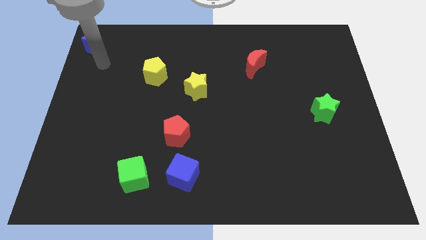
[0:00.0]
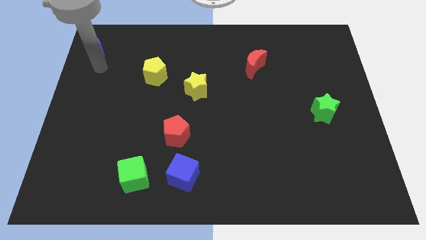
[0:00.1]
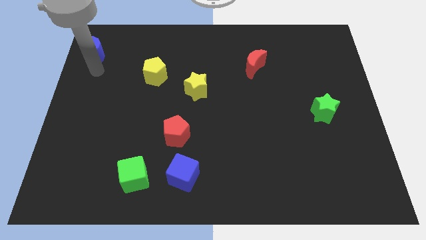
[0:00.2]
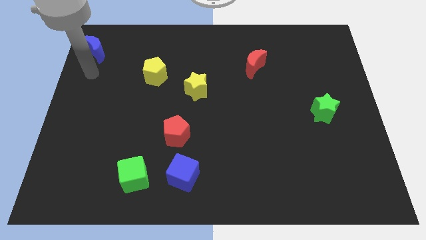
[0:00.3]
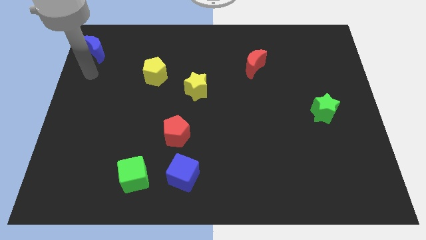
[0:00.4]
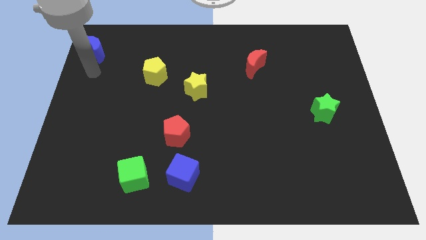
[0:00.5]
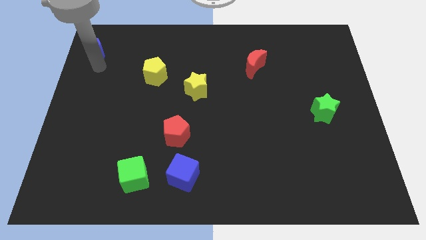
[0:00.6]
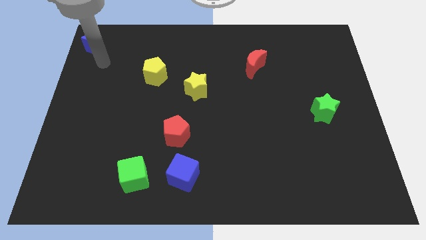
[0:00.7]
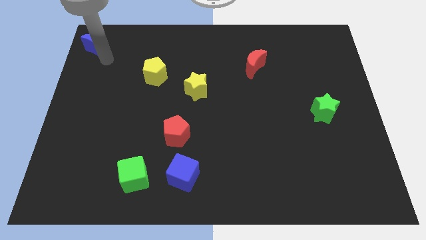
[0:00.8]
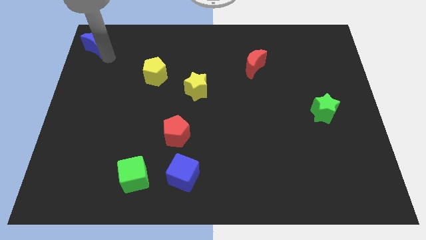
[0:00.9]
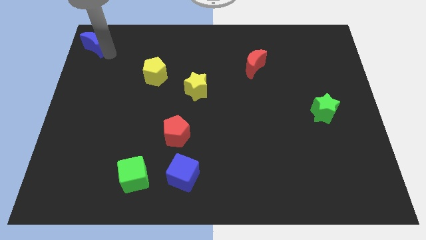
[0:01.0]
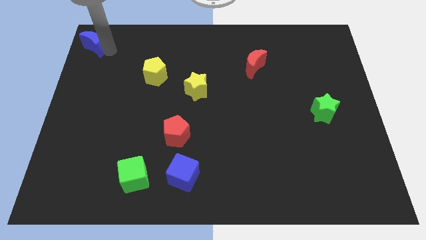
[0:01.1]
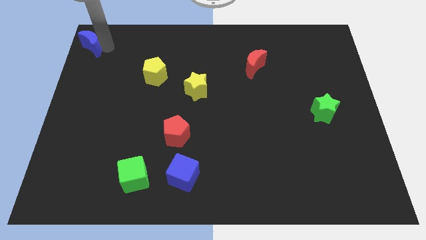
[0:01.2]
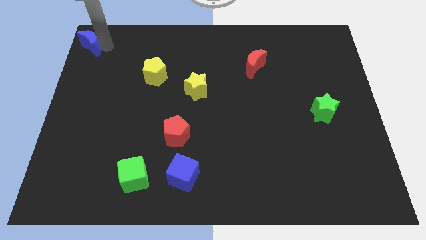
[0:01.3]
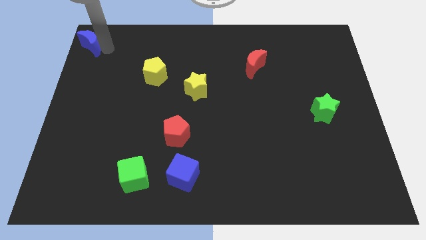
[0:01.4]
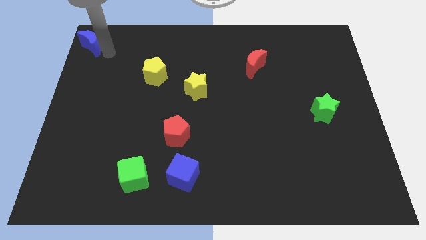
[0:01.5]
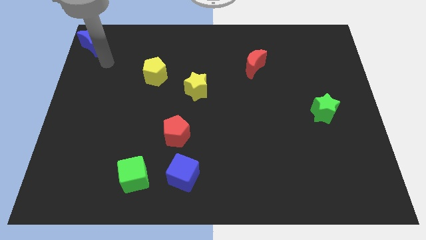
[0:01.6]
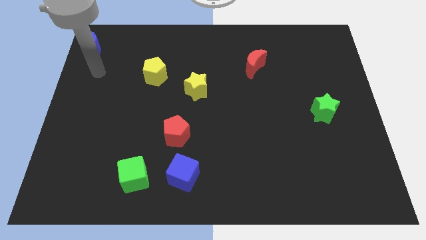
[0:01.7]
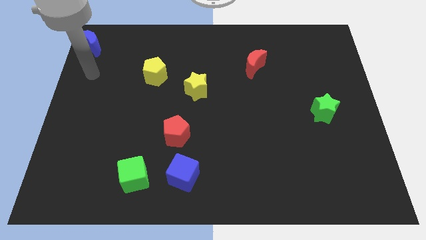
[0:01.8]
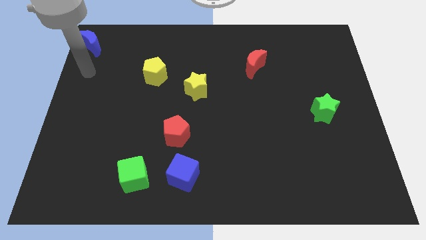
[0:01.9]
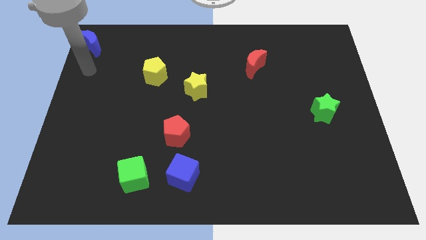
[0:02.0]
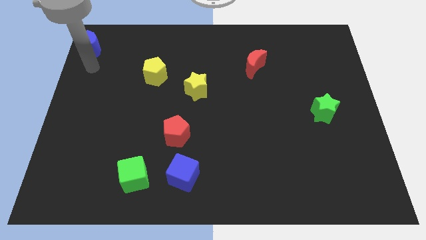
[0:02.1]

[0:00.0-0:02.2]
place your arm below the blue moon

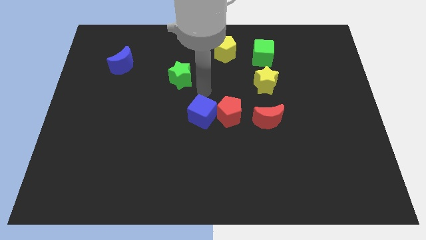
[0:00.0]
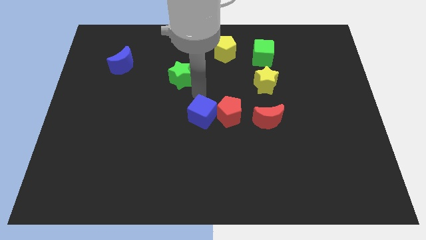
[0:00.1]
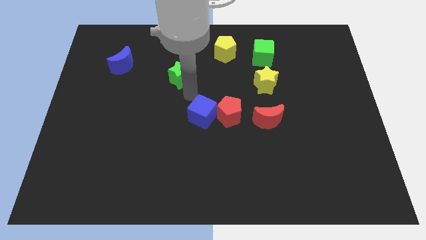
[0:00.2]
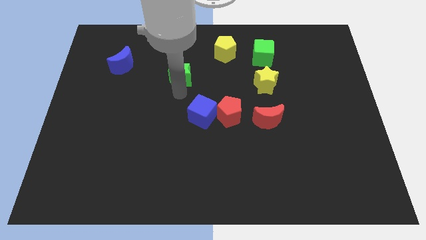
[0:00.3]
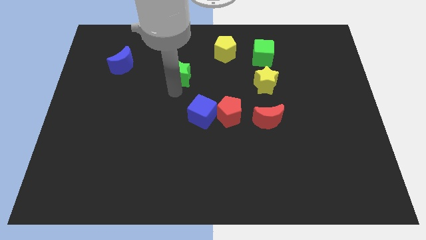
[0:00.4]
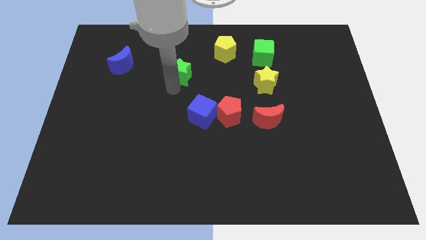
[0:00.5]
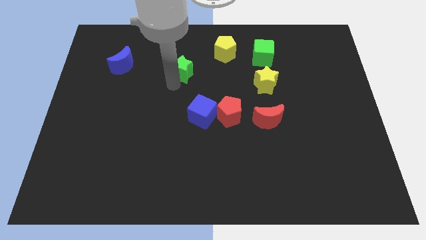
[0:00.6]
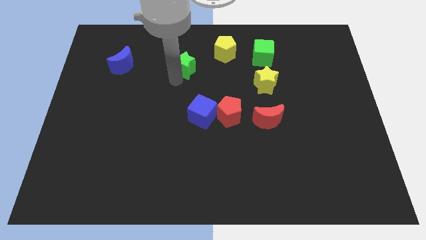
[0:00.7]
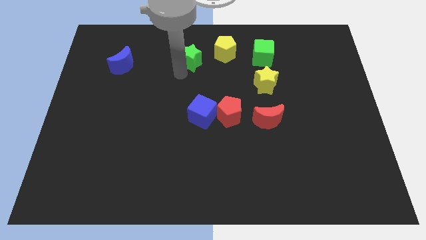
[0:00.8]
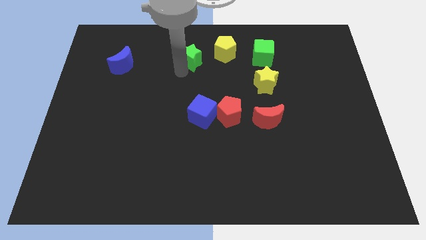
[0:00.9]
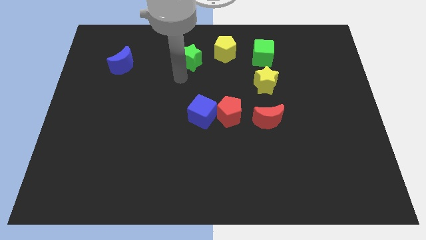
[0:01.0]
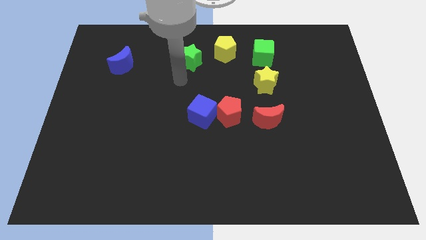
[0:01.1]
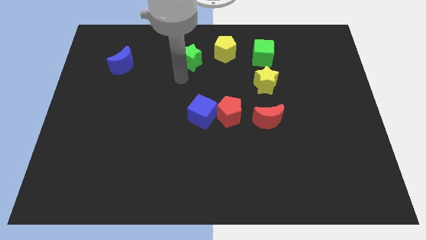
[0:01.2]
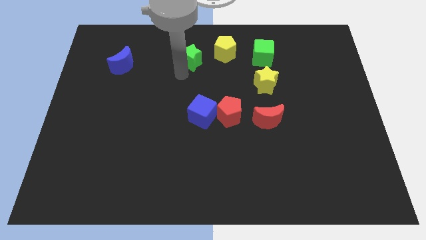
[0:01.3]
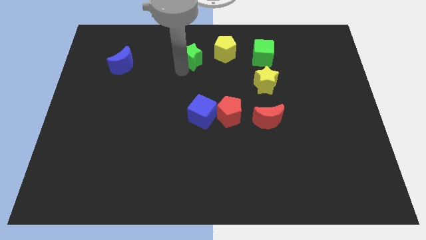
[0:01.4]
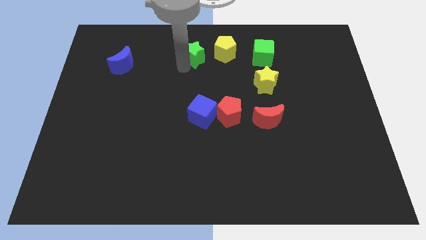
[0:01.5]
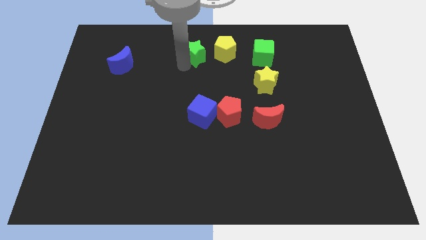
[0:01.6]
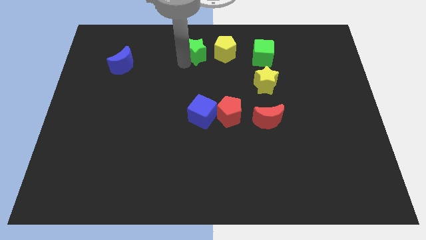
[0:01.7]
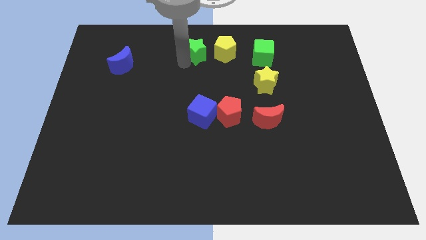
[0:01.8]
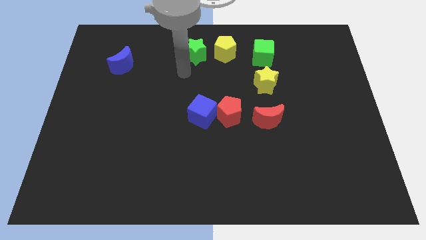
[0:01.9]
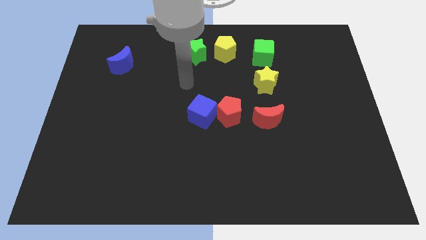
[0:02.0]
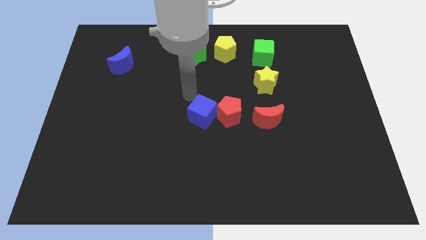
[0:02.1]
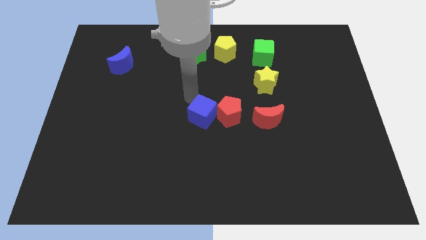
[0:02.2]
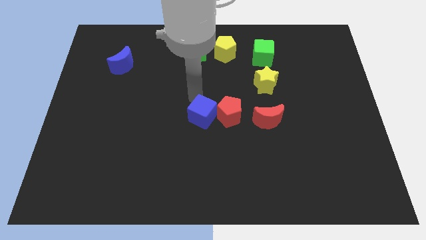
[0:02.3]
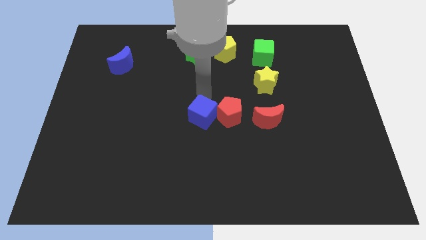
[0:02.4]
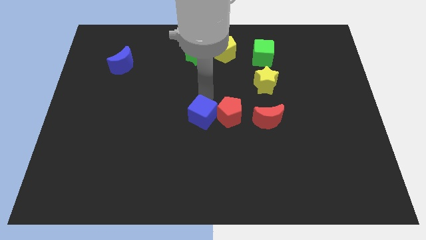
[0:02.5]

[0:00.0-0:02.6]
place the green star to the left of the yellow pentagon

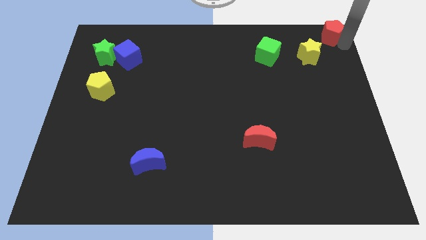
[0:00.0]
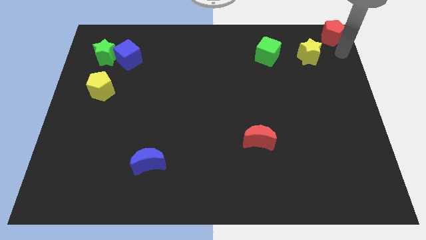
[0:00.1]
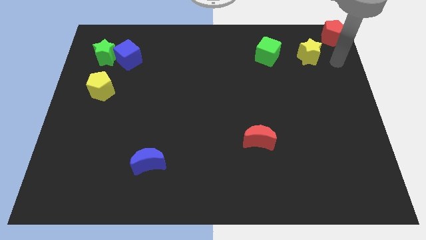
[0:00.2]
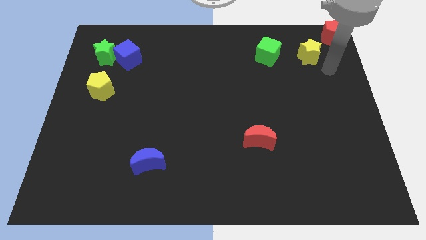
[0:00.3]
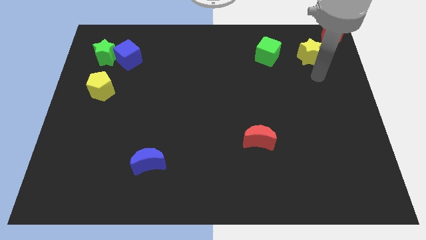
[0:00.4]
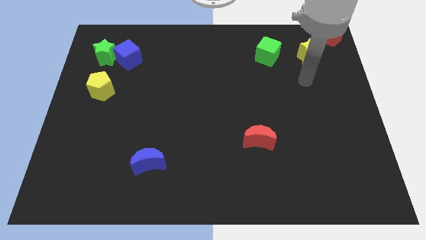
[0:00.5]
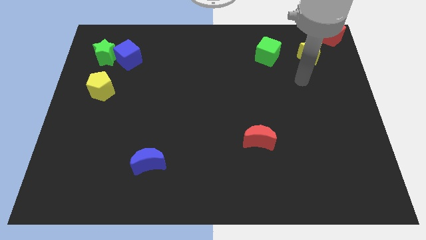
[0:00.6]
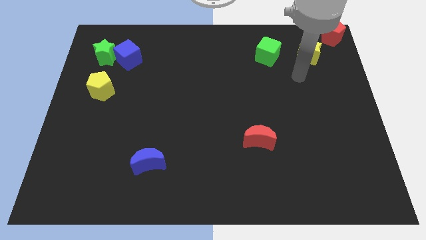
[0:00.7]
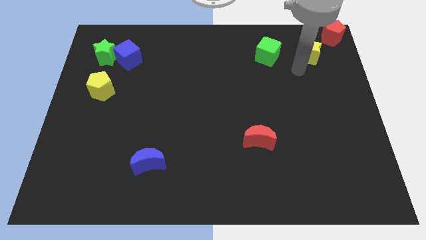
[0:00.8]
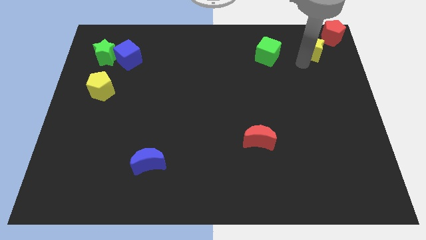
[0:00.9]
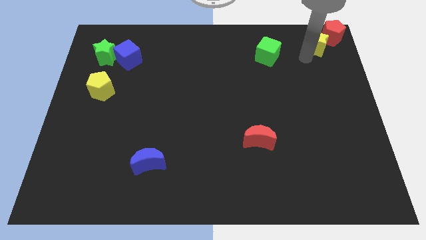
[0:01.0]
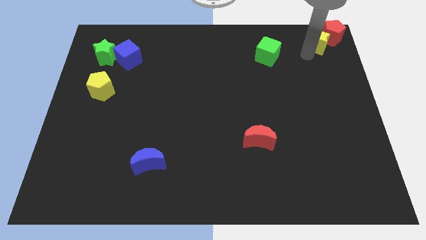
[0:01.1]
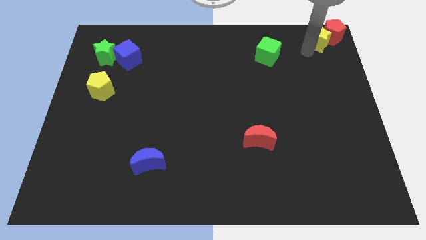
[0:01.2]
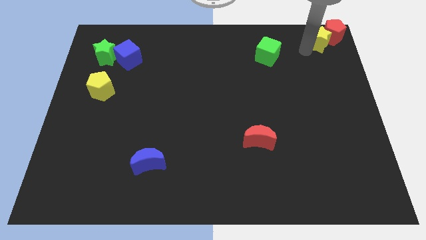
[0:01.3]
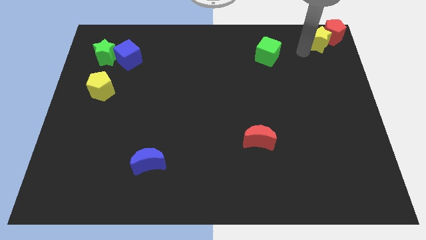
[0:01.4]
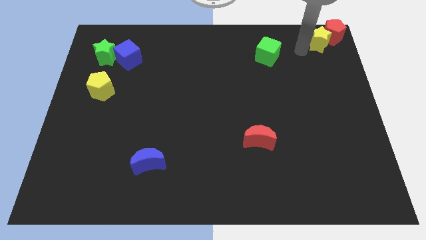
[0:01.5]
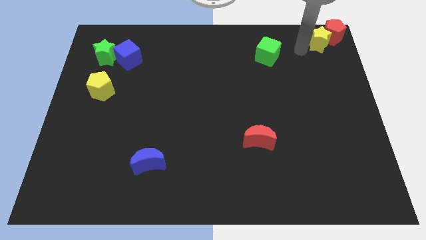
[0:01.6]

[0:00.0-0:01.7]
push the yellow star into the red pentagon

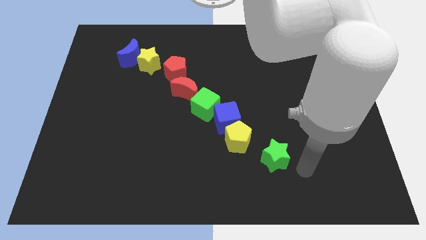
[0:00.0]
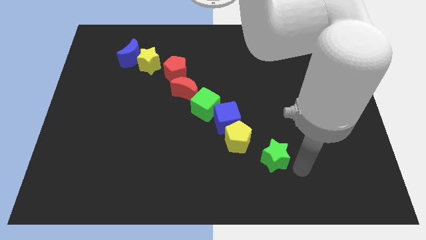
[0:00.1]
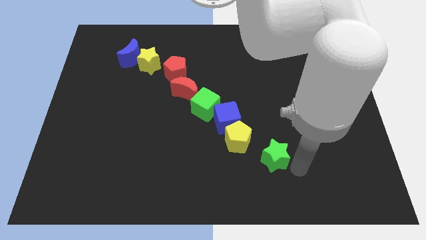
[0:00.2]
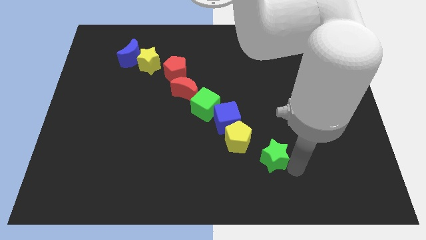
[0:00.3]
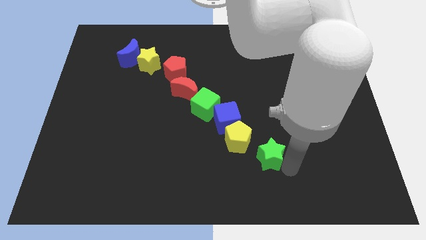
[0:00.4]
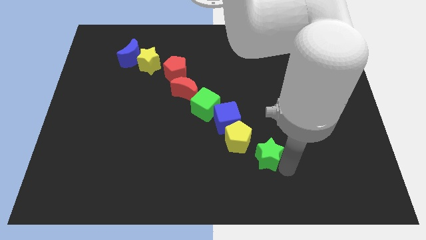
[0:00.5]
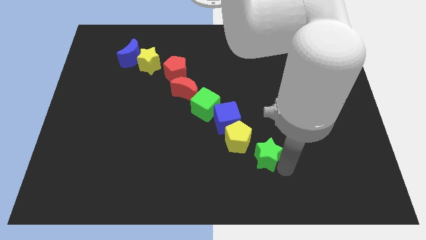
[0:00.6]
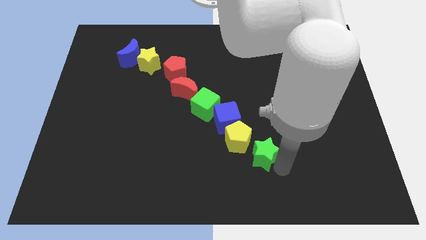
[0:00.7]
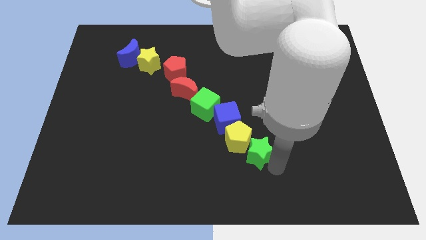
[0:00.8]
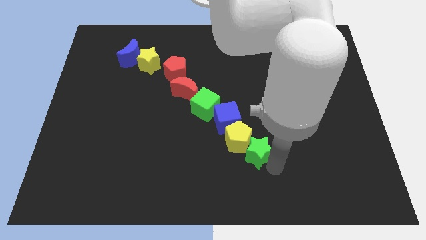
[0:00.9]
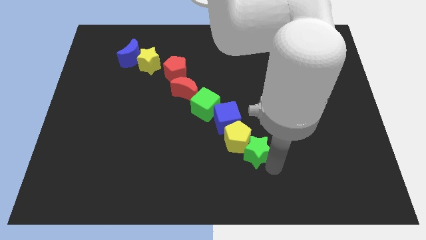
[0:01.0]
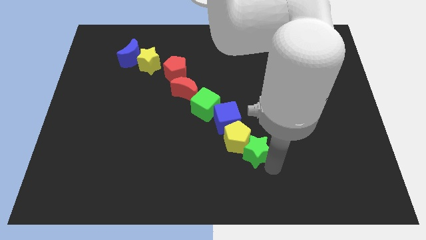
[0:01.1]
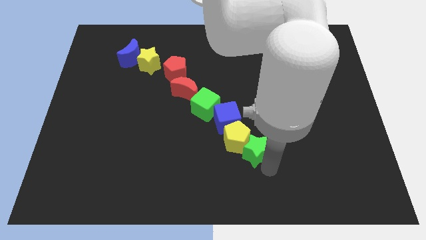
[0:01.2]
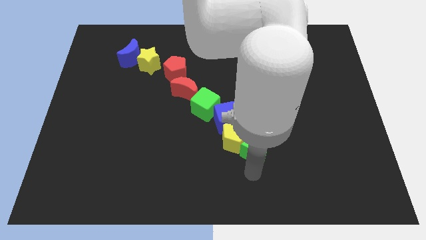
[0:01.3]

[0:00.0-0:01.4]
push the green star into the yellow pentagon

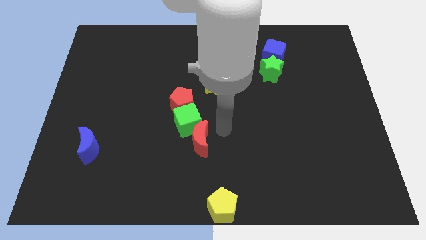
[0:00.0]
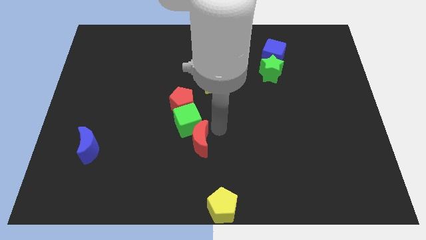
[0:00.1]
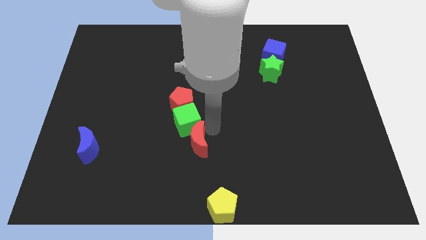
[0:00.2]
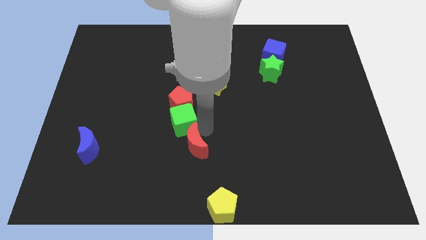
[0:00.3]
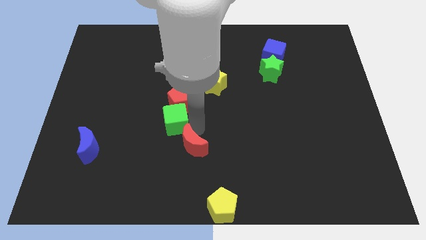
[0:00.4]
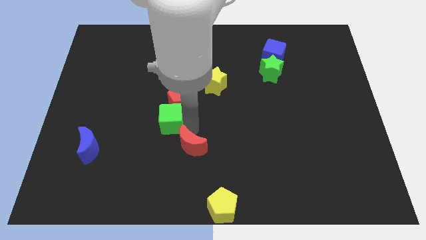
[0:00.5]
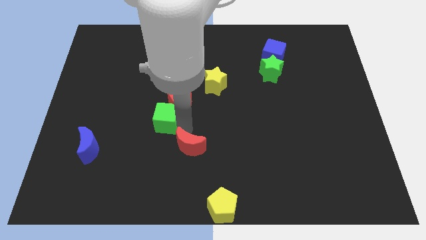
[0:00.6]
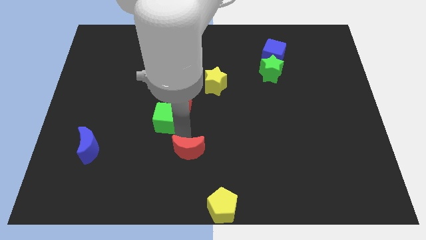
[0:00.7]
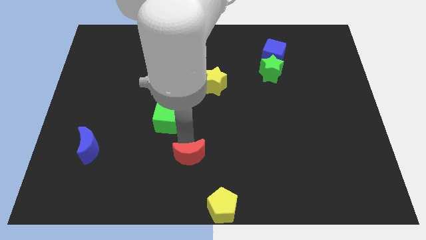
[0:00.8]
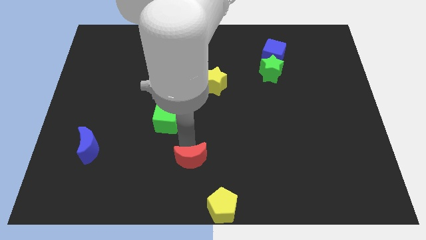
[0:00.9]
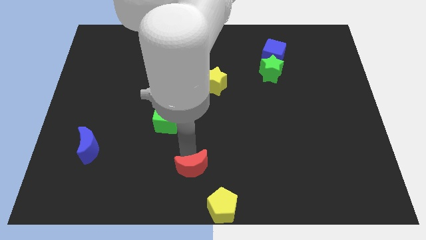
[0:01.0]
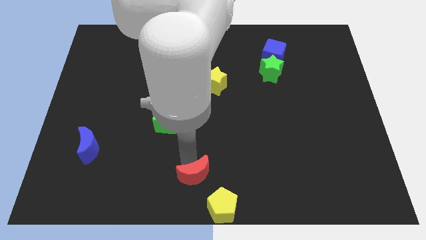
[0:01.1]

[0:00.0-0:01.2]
separate red moon from the green cube
